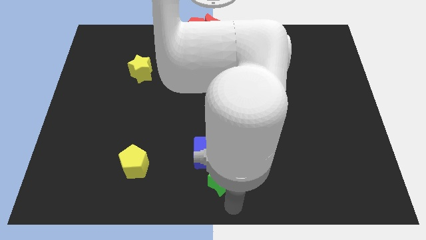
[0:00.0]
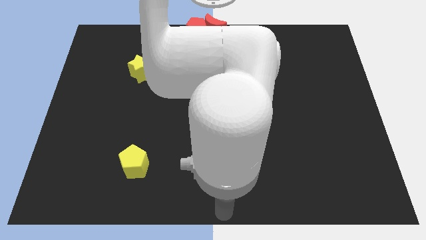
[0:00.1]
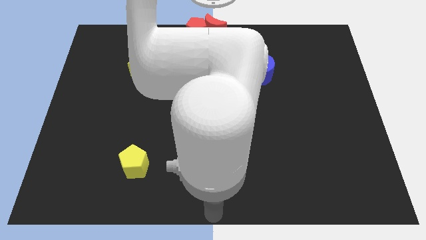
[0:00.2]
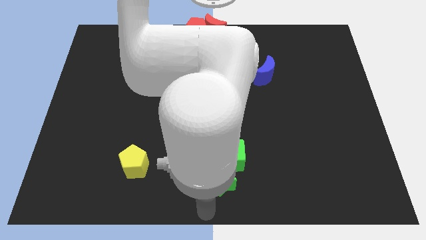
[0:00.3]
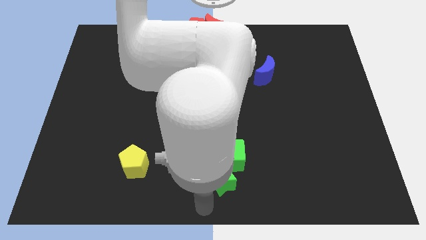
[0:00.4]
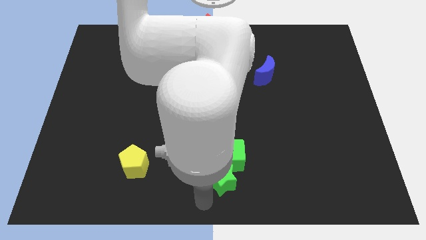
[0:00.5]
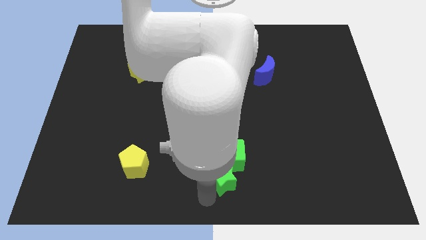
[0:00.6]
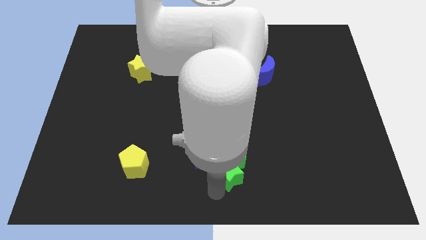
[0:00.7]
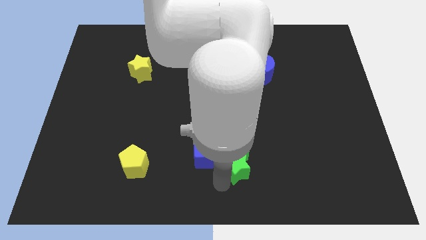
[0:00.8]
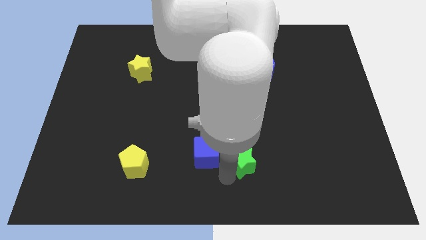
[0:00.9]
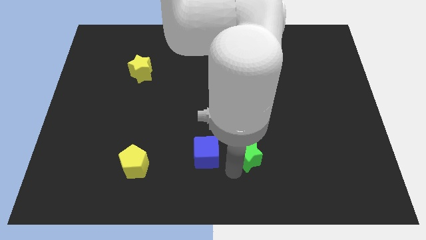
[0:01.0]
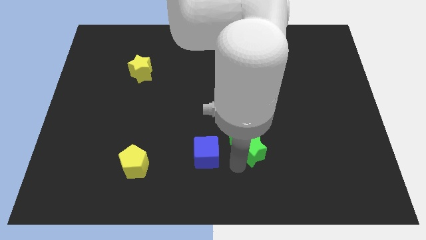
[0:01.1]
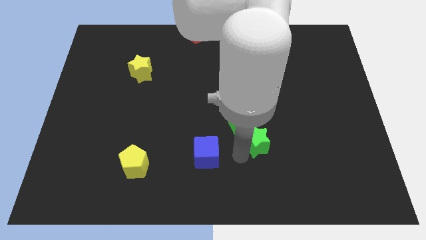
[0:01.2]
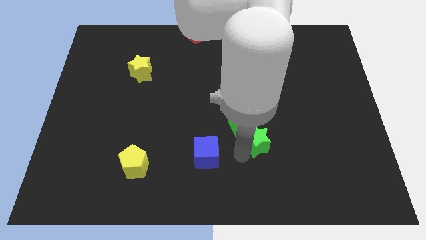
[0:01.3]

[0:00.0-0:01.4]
push the green star into the green cube

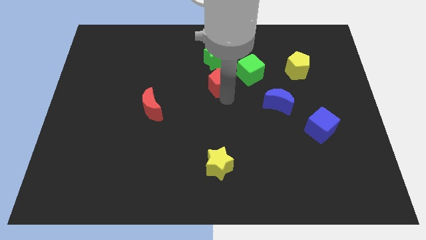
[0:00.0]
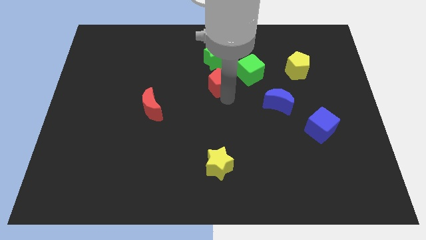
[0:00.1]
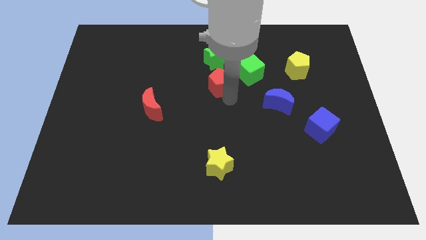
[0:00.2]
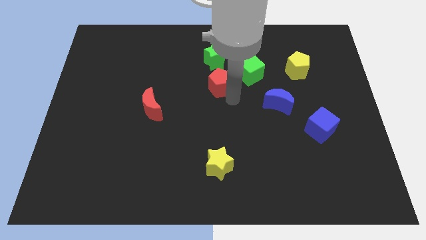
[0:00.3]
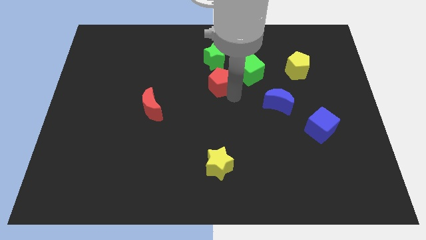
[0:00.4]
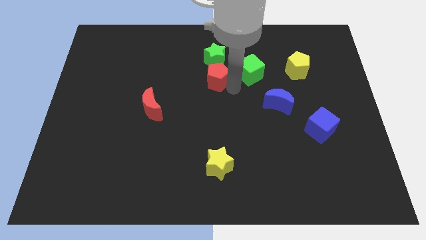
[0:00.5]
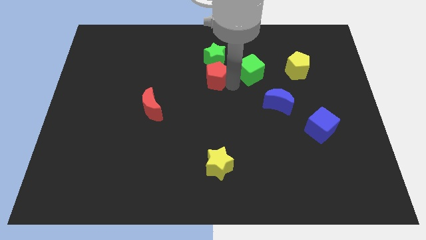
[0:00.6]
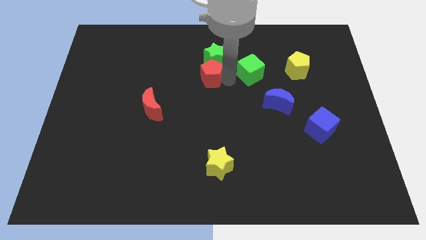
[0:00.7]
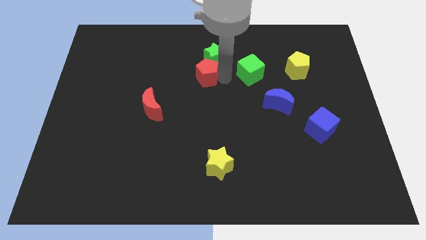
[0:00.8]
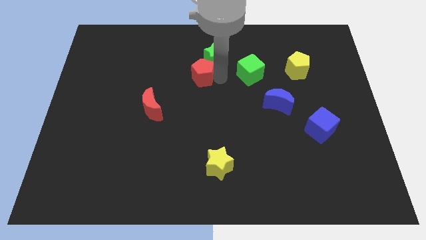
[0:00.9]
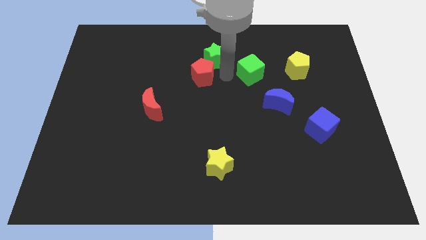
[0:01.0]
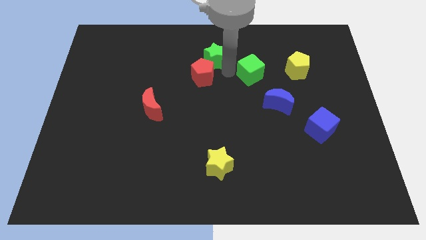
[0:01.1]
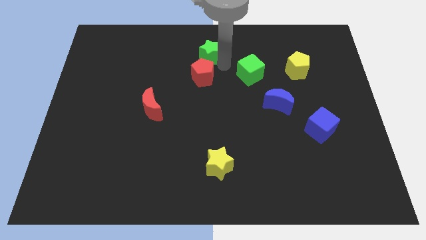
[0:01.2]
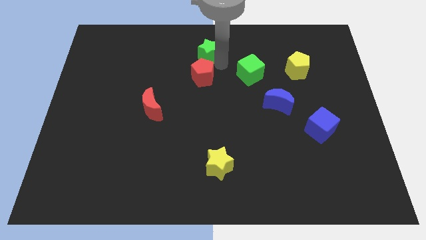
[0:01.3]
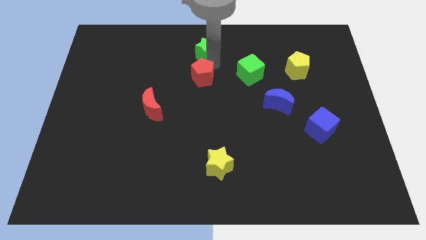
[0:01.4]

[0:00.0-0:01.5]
place red pentagon below the green star

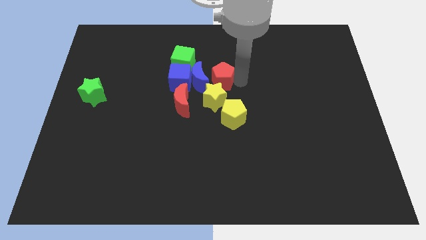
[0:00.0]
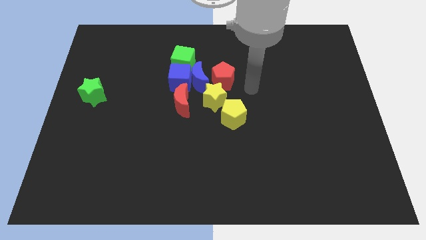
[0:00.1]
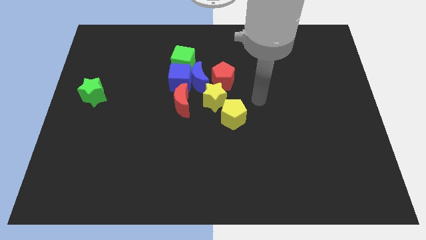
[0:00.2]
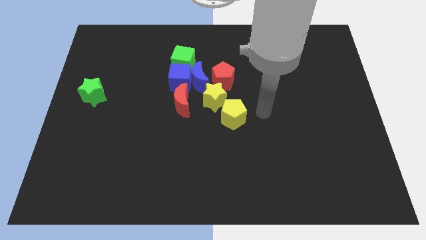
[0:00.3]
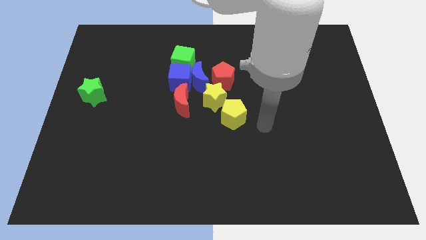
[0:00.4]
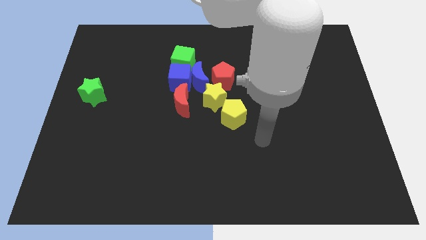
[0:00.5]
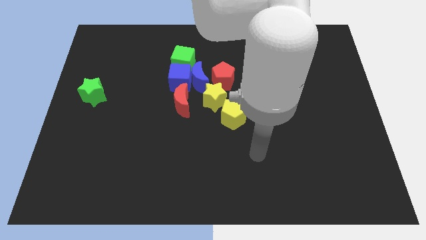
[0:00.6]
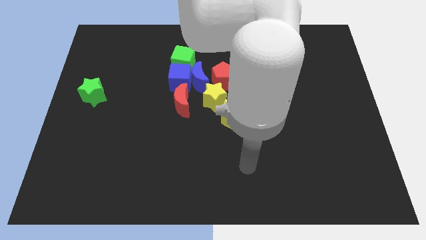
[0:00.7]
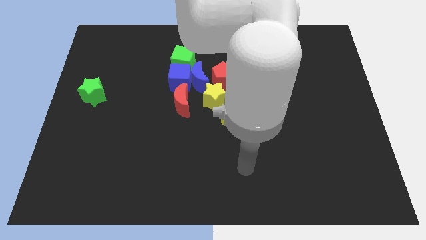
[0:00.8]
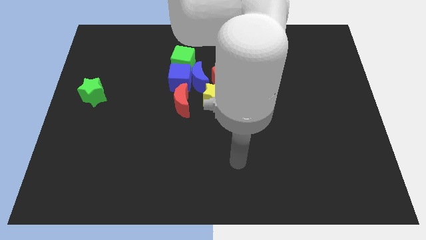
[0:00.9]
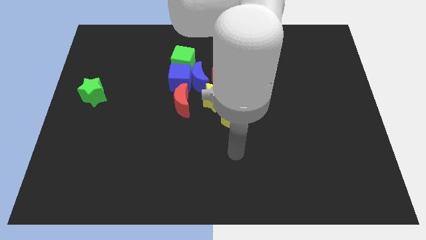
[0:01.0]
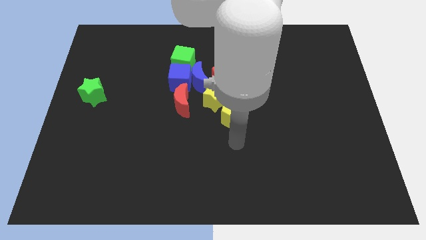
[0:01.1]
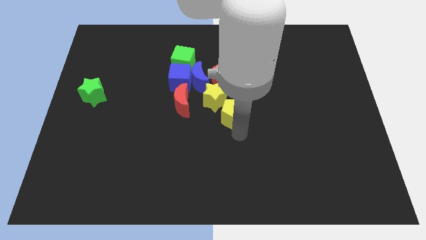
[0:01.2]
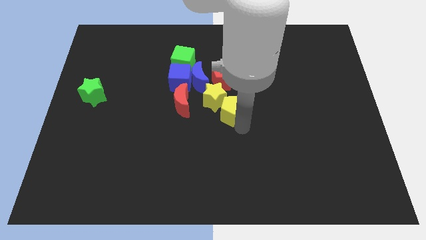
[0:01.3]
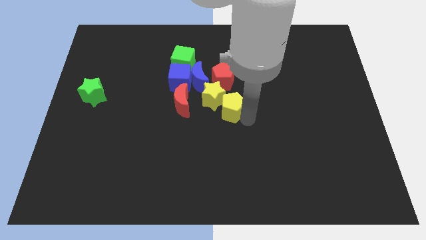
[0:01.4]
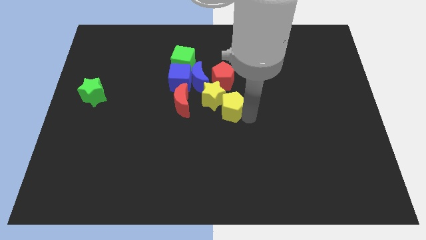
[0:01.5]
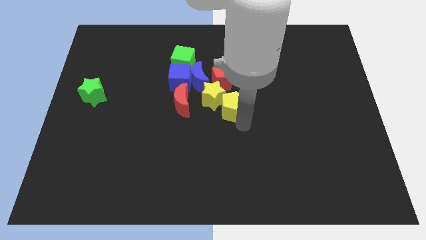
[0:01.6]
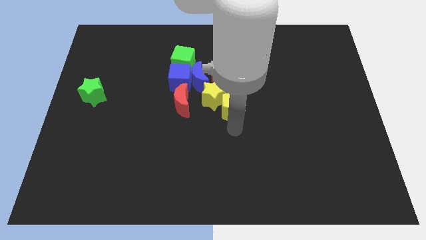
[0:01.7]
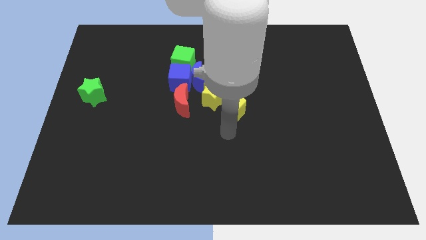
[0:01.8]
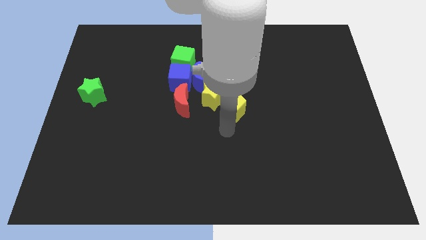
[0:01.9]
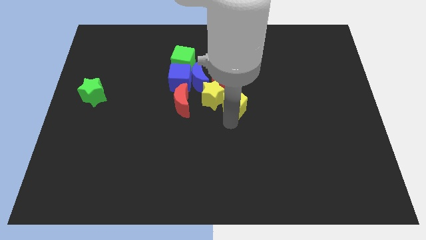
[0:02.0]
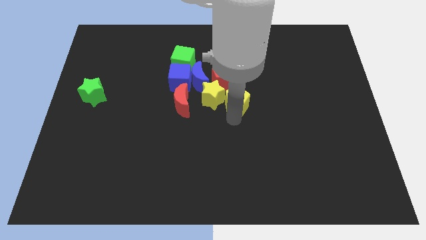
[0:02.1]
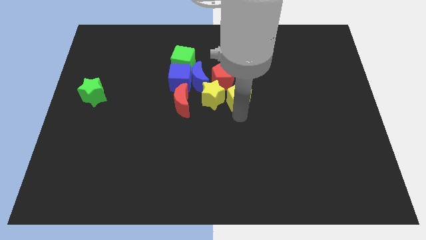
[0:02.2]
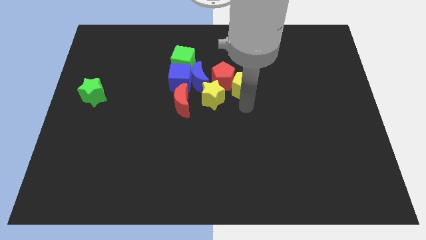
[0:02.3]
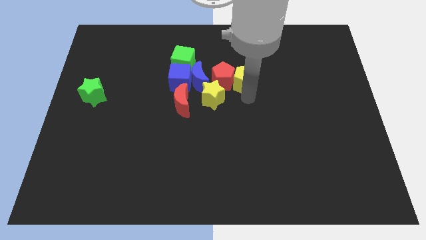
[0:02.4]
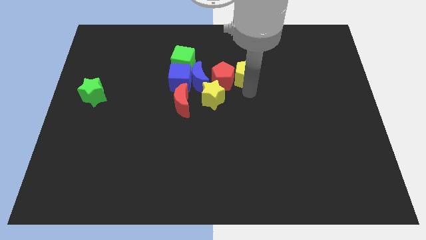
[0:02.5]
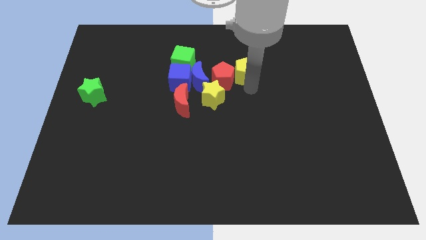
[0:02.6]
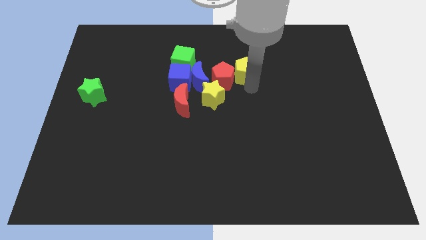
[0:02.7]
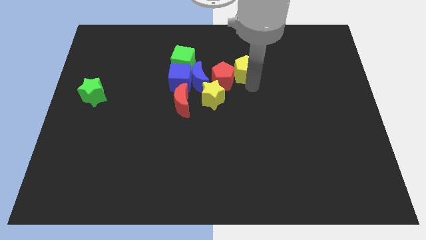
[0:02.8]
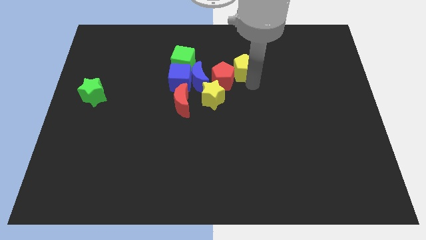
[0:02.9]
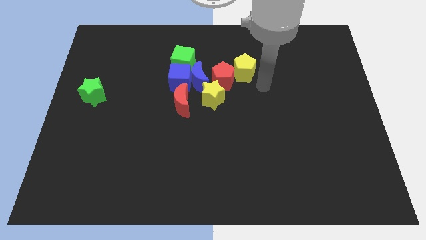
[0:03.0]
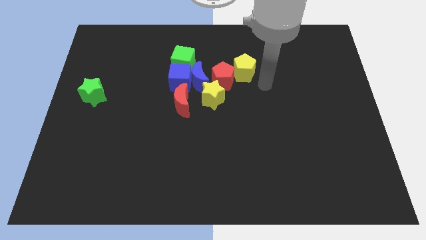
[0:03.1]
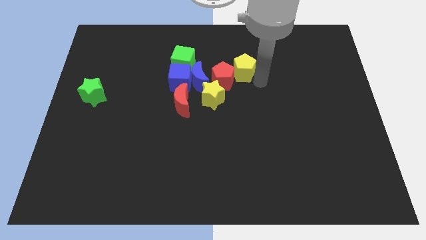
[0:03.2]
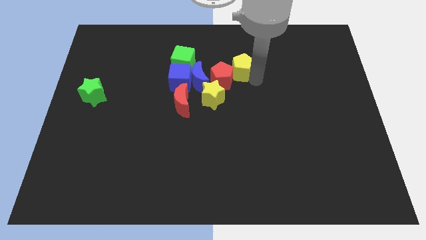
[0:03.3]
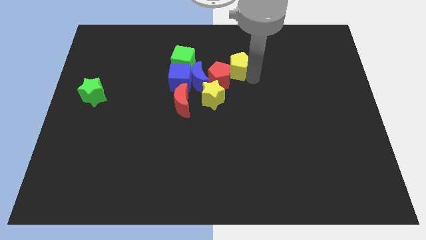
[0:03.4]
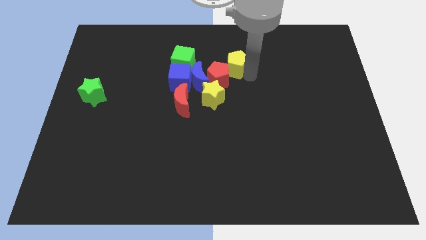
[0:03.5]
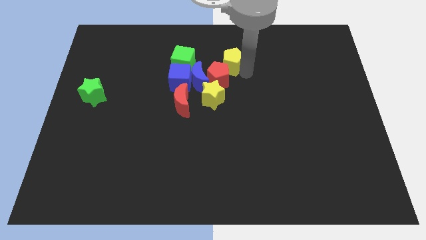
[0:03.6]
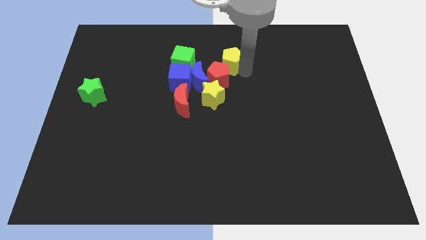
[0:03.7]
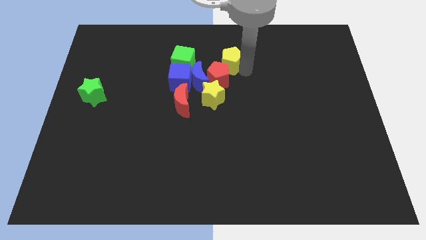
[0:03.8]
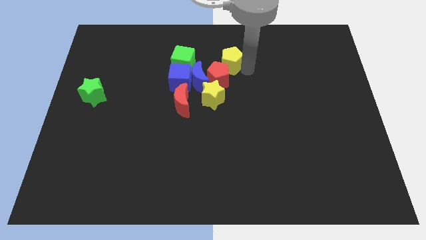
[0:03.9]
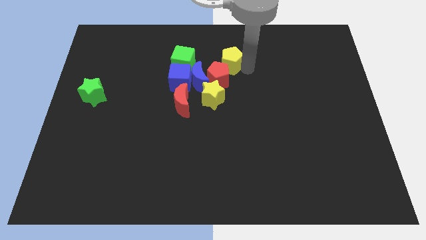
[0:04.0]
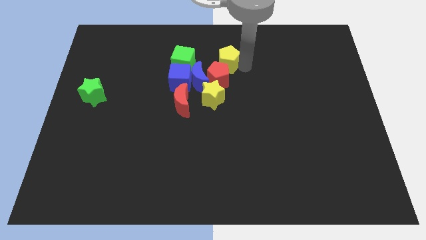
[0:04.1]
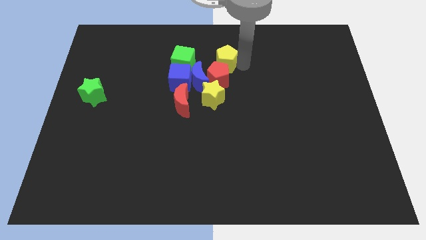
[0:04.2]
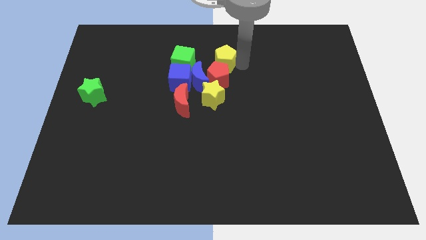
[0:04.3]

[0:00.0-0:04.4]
move the yellow pentagon to the top of the red pentagon

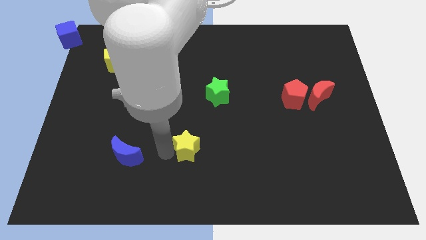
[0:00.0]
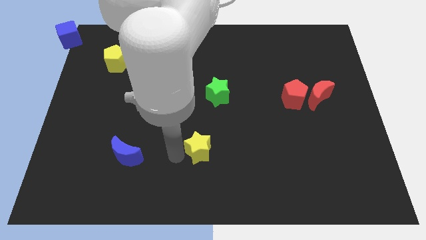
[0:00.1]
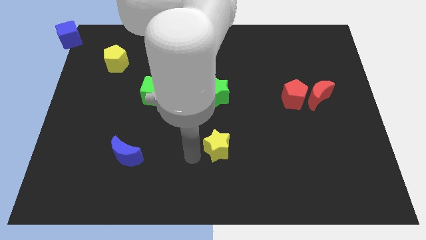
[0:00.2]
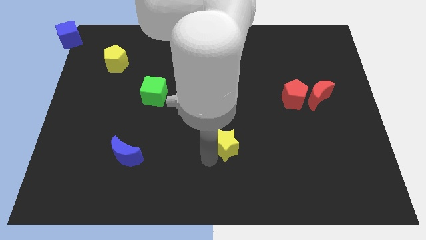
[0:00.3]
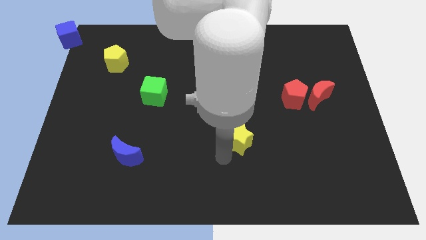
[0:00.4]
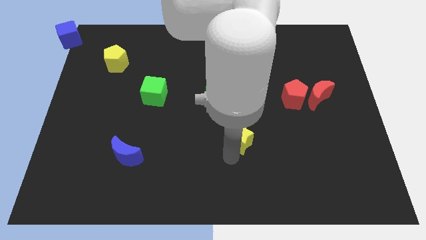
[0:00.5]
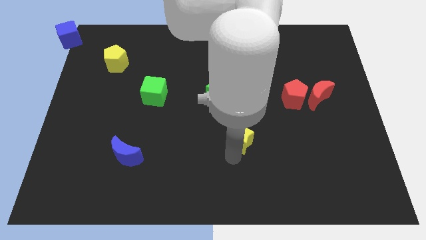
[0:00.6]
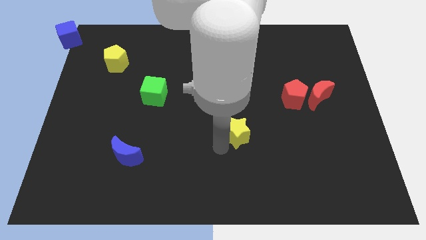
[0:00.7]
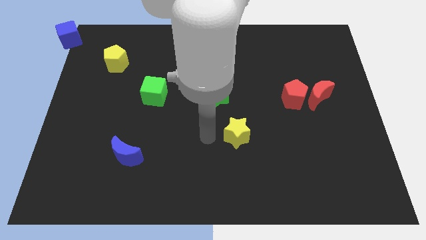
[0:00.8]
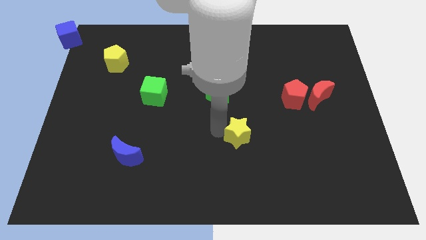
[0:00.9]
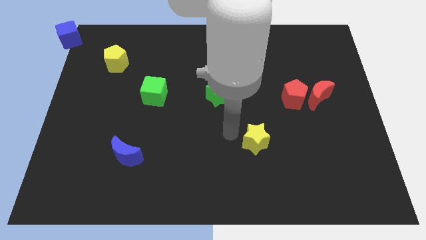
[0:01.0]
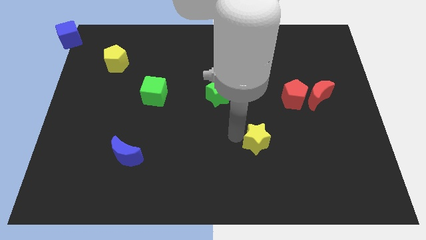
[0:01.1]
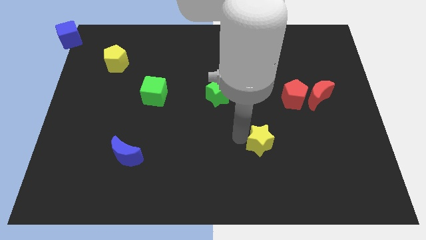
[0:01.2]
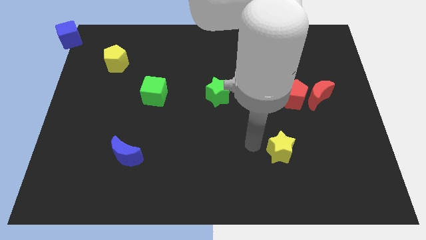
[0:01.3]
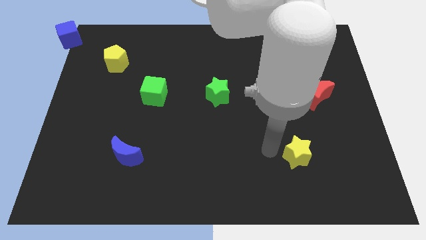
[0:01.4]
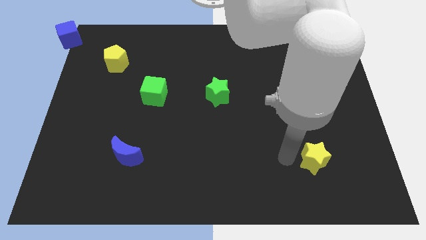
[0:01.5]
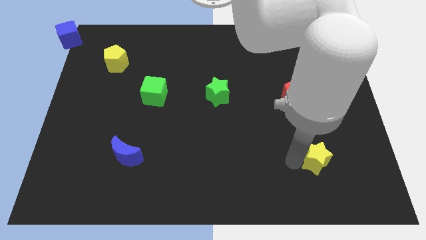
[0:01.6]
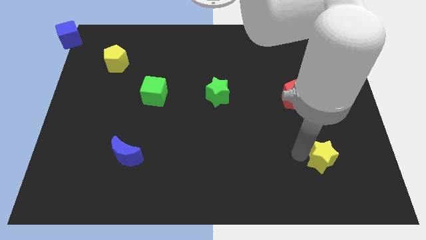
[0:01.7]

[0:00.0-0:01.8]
move the yellow star to the right of the board

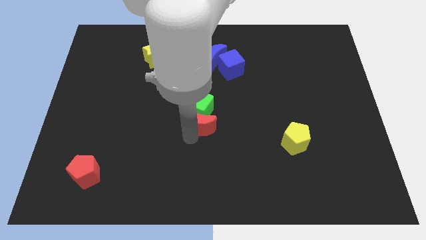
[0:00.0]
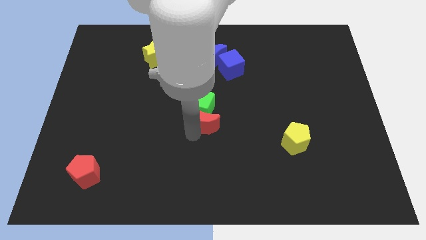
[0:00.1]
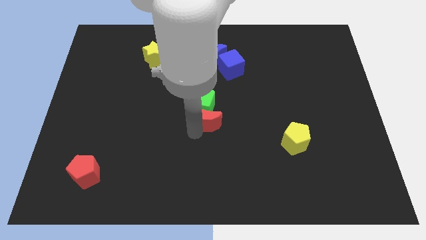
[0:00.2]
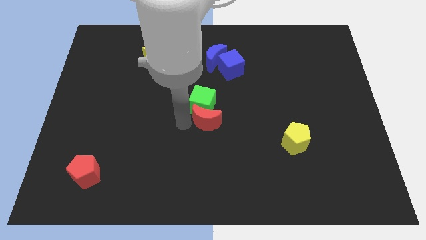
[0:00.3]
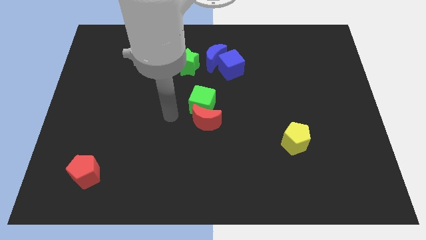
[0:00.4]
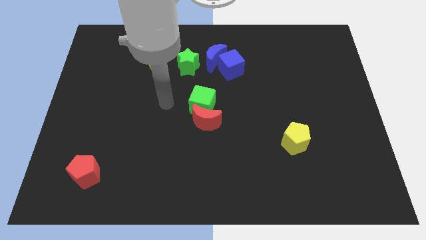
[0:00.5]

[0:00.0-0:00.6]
place the green cube and red crescent at the center of the board
